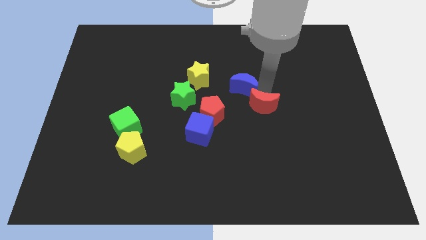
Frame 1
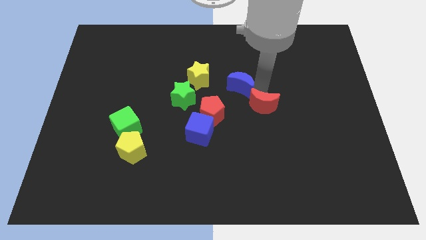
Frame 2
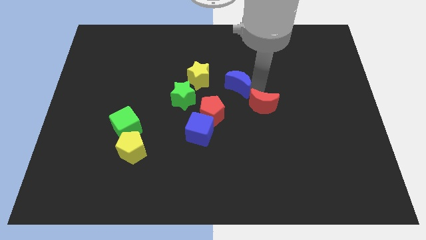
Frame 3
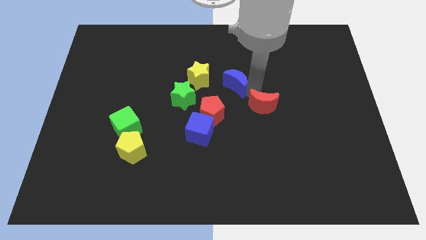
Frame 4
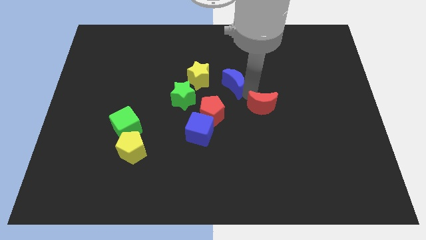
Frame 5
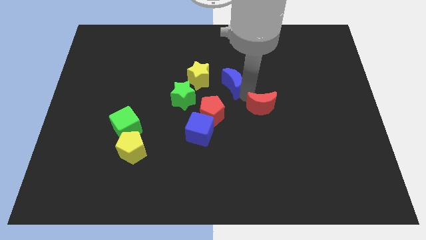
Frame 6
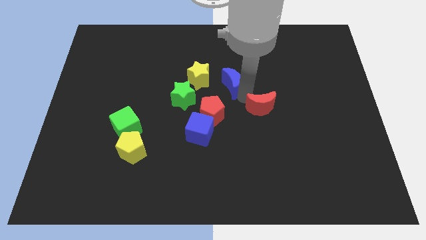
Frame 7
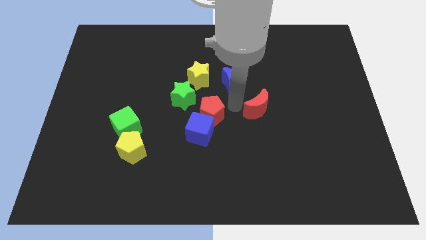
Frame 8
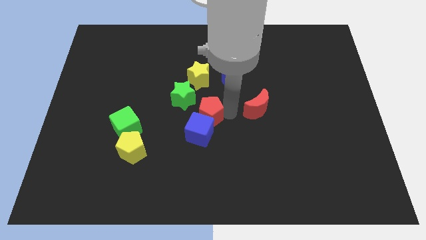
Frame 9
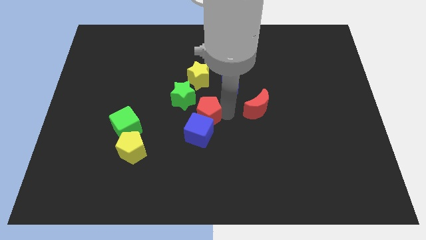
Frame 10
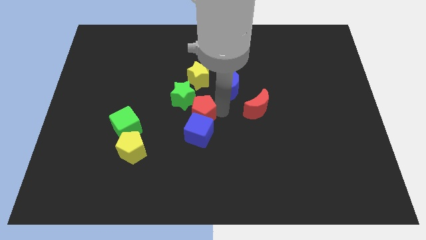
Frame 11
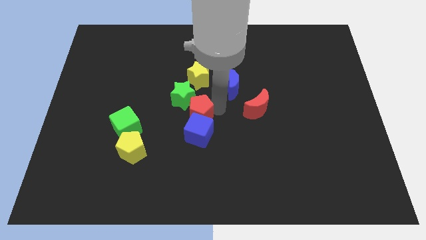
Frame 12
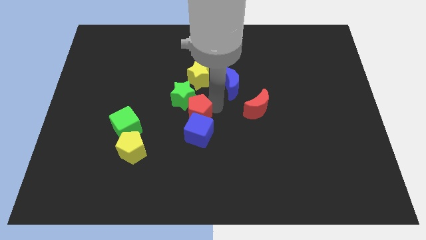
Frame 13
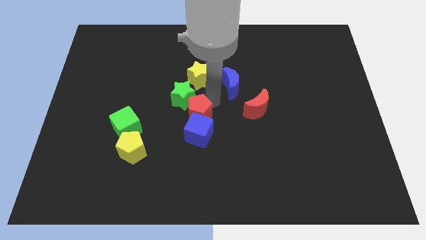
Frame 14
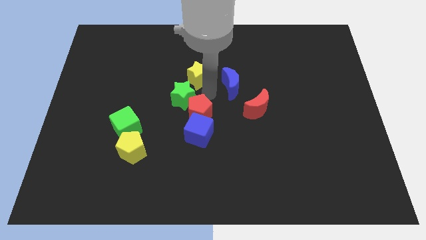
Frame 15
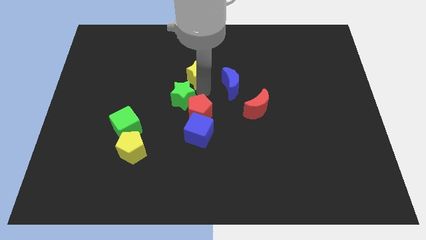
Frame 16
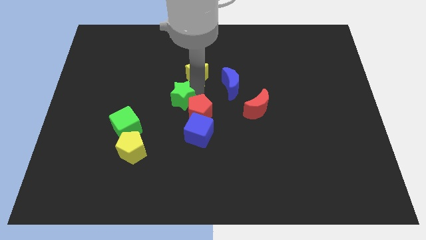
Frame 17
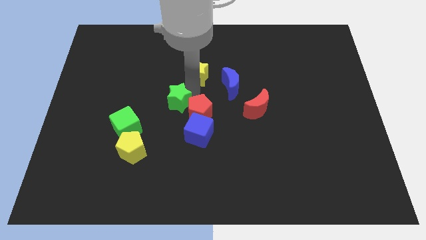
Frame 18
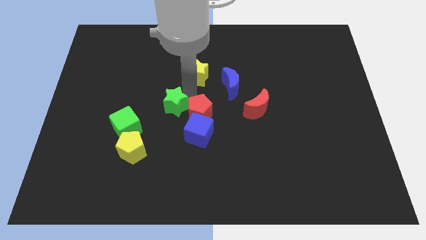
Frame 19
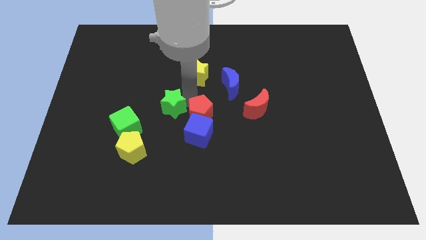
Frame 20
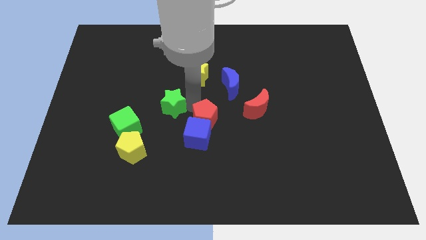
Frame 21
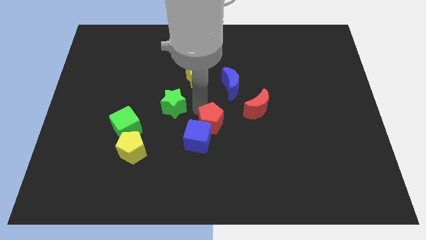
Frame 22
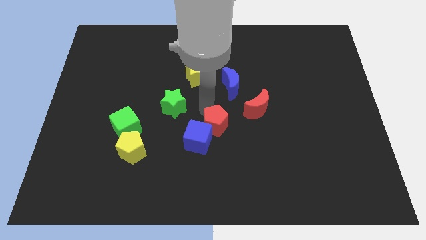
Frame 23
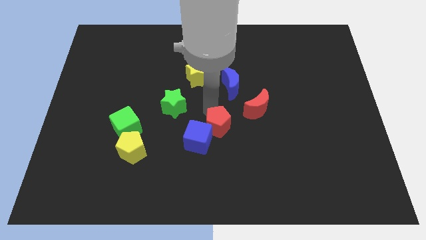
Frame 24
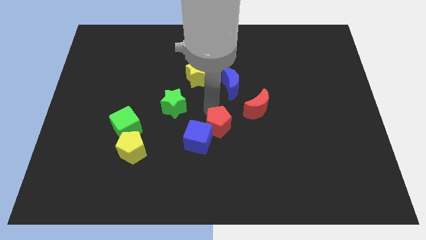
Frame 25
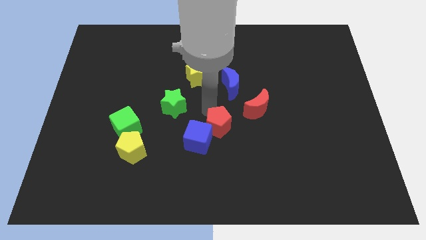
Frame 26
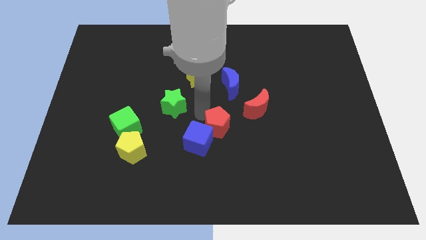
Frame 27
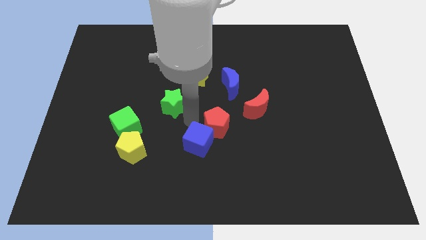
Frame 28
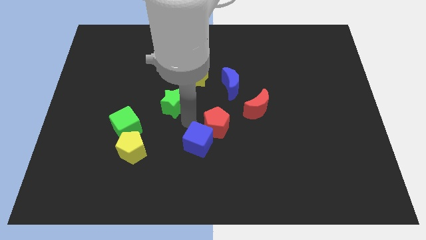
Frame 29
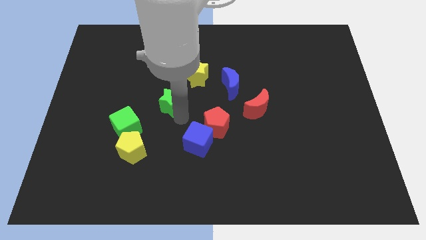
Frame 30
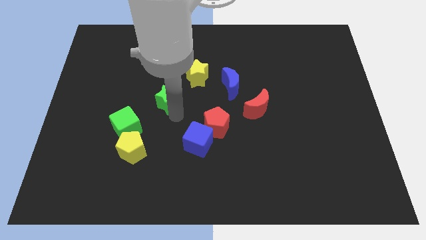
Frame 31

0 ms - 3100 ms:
move the red pentagon to the center of the board

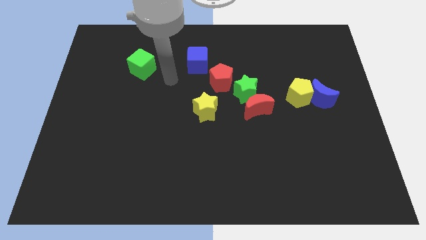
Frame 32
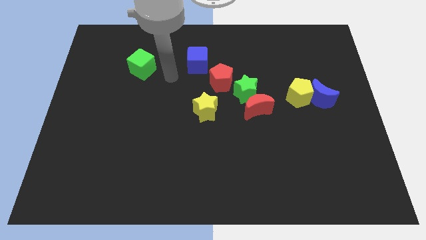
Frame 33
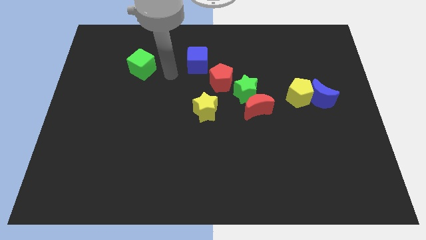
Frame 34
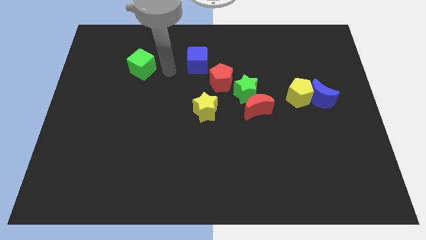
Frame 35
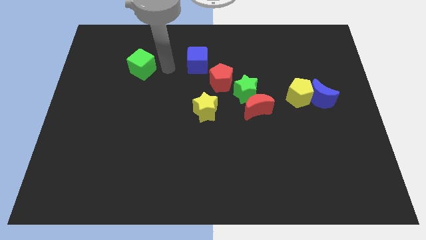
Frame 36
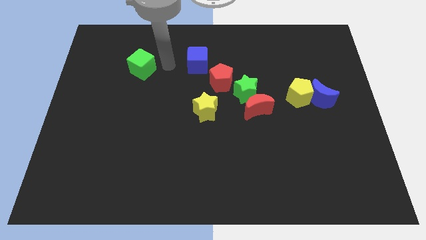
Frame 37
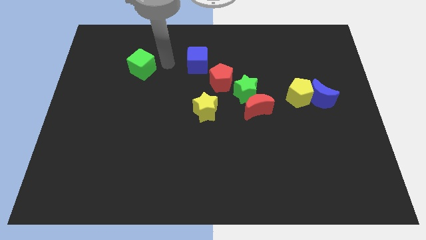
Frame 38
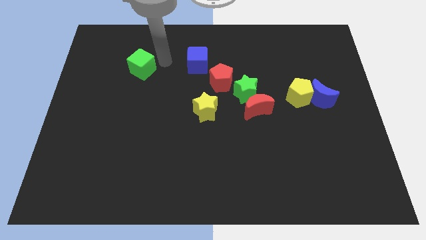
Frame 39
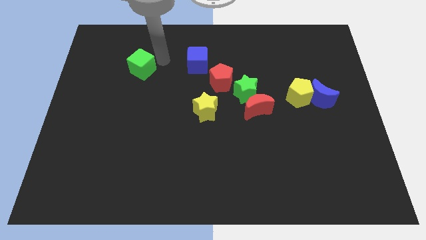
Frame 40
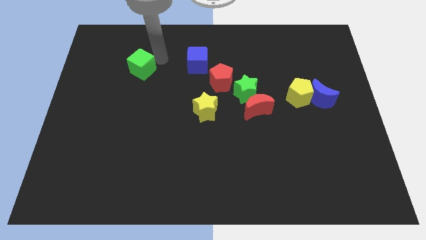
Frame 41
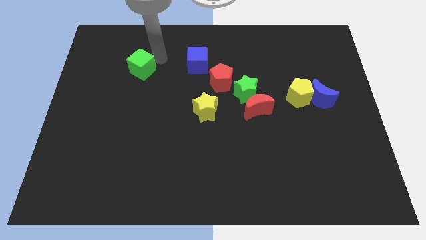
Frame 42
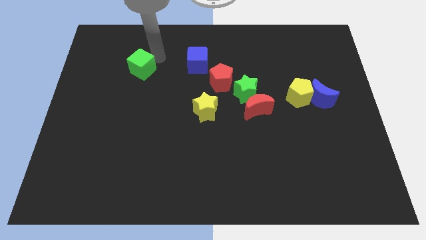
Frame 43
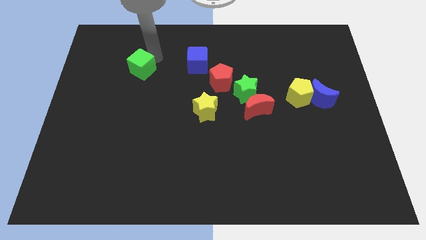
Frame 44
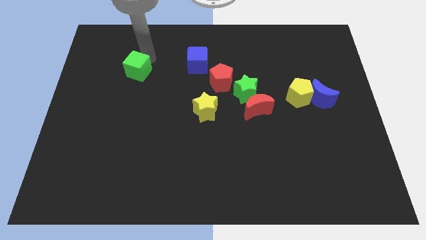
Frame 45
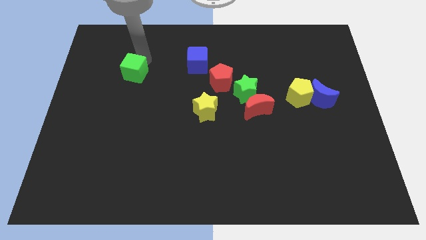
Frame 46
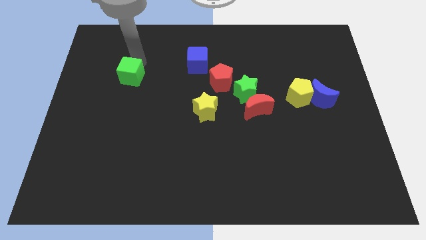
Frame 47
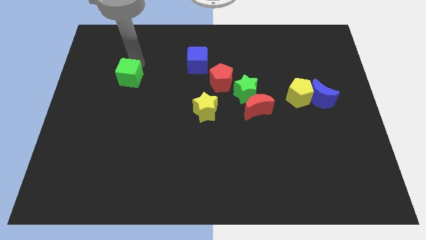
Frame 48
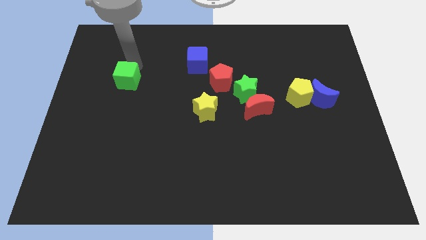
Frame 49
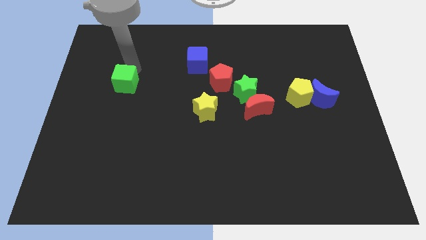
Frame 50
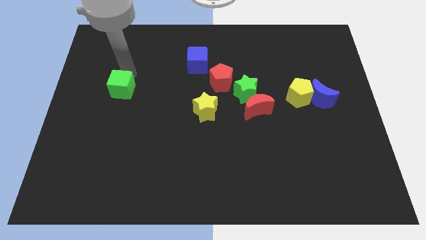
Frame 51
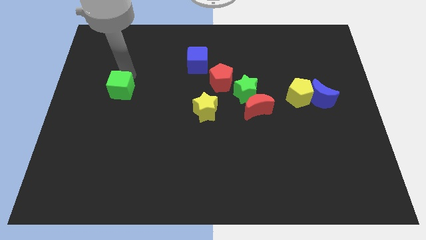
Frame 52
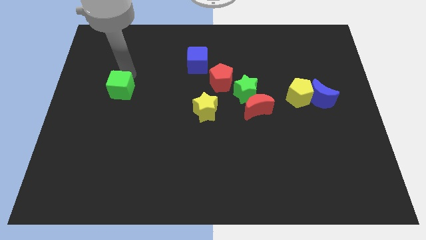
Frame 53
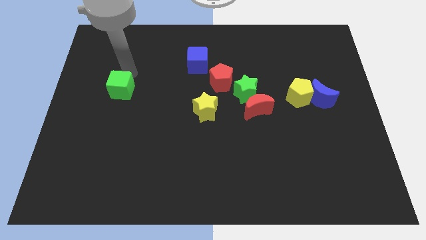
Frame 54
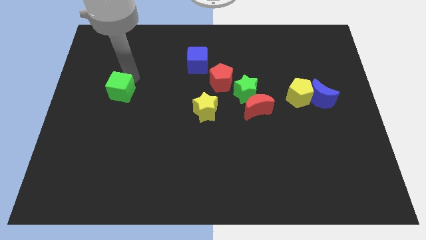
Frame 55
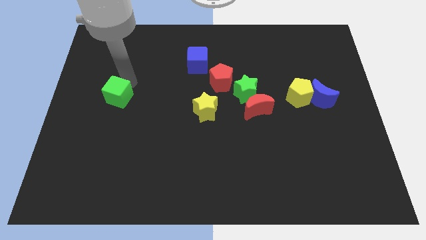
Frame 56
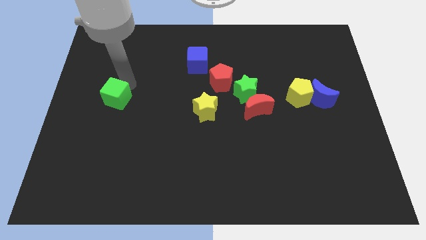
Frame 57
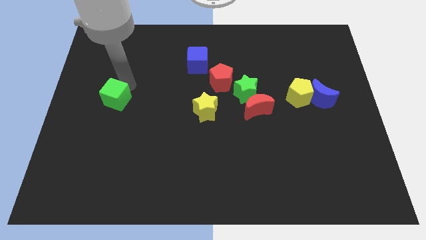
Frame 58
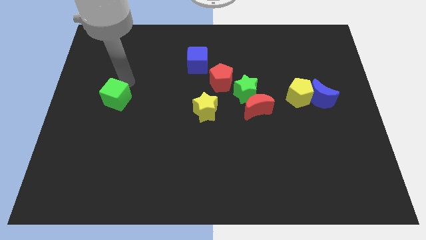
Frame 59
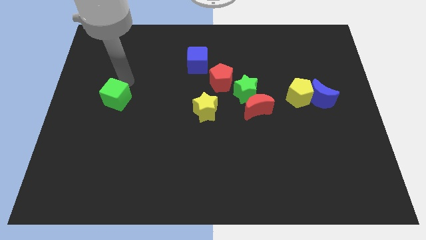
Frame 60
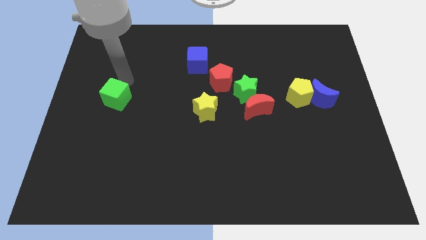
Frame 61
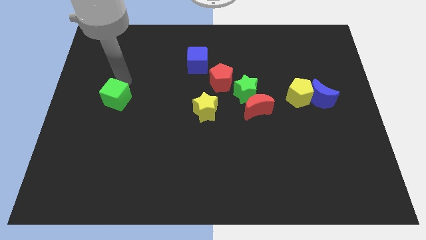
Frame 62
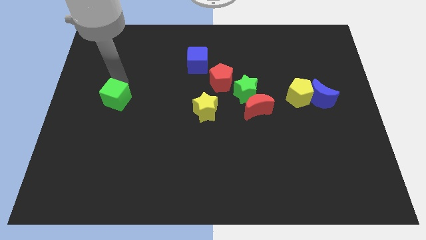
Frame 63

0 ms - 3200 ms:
move the green cube towards bottom

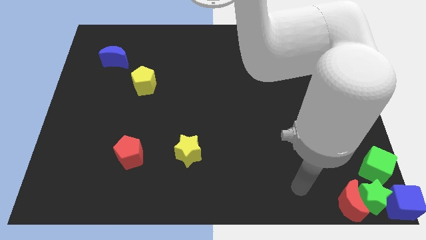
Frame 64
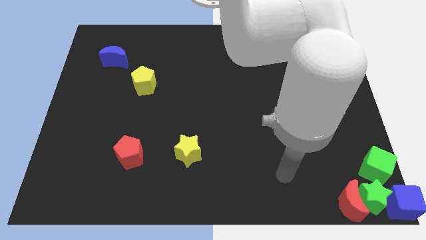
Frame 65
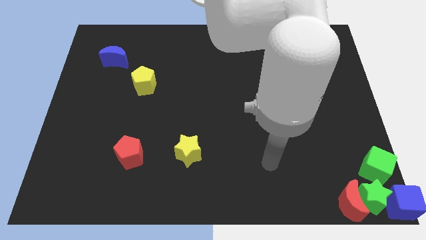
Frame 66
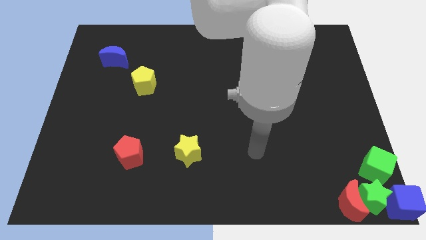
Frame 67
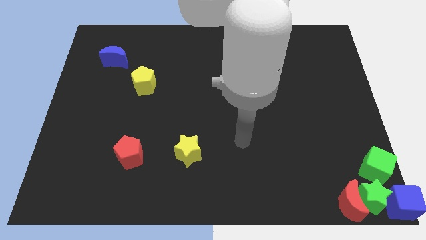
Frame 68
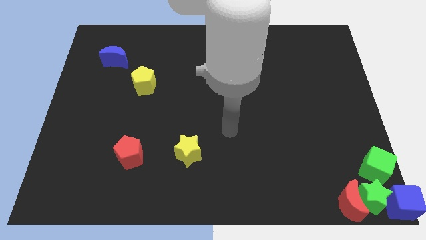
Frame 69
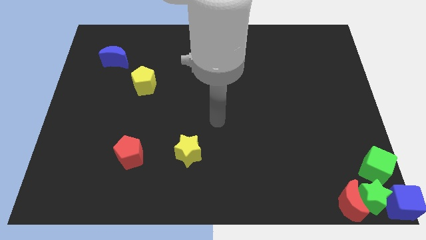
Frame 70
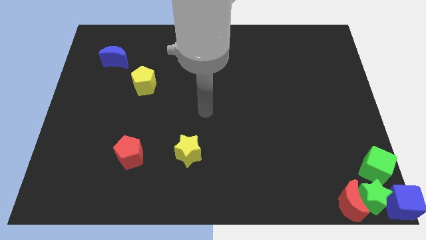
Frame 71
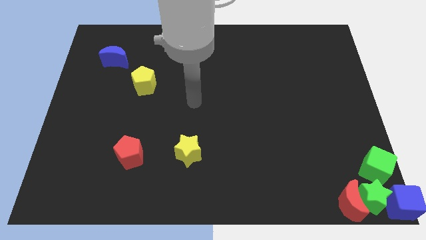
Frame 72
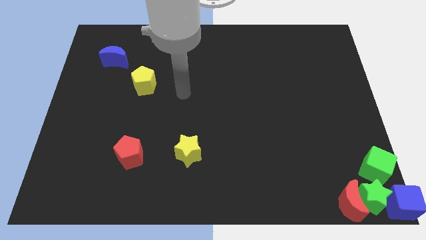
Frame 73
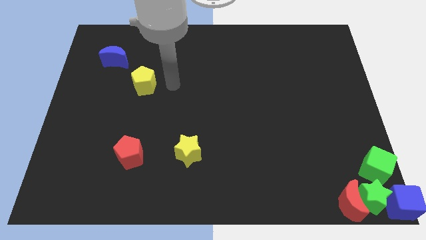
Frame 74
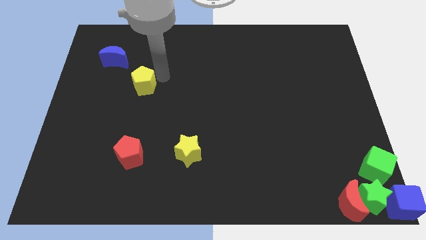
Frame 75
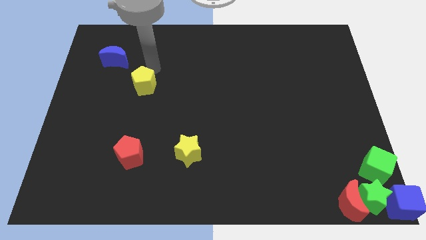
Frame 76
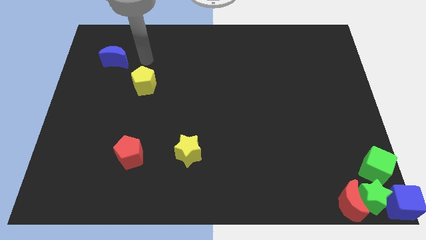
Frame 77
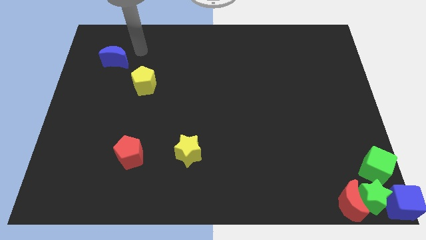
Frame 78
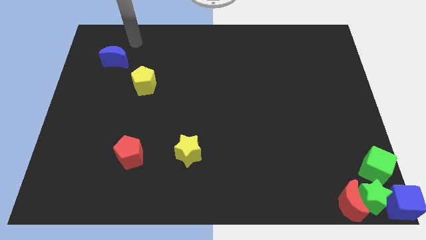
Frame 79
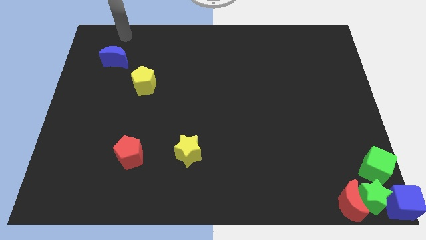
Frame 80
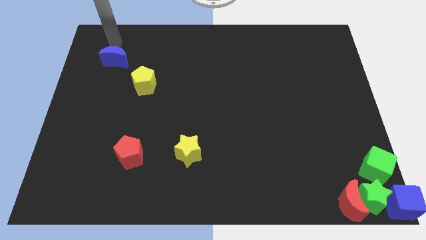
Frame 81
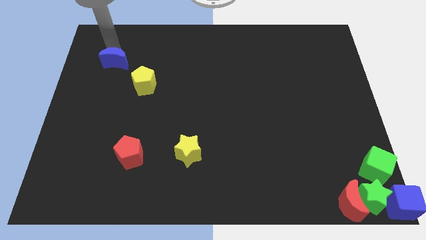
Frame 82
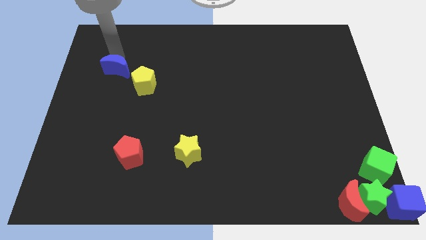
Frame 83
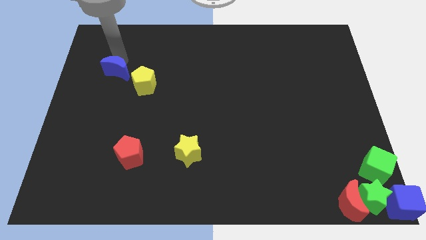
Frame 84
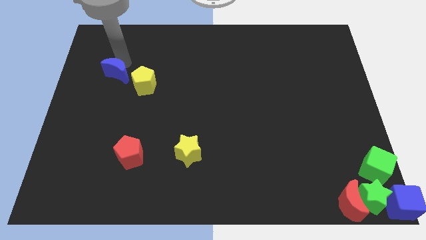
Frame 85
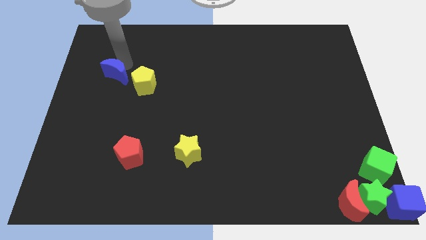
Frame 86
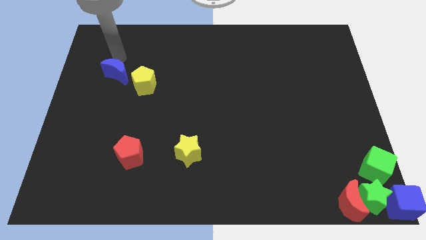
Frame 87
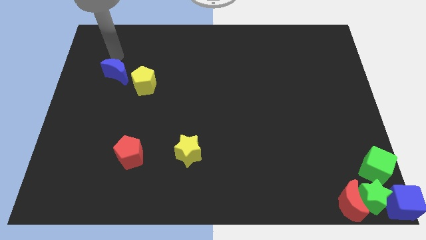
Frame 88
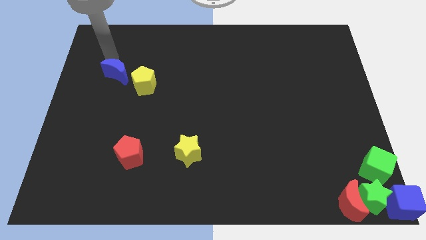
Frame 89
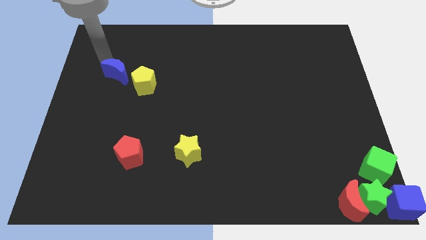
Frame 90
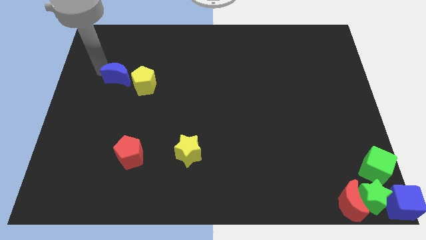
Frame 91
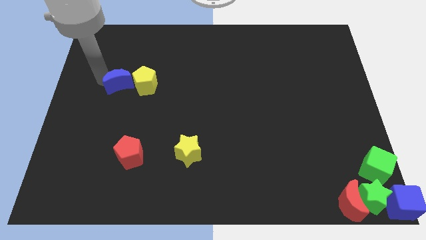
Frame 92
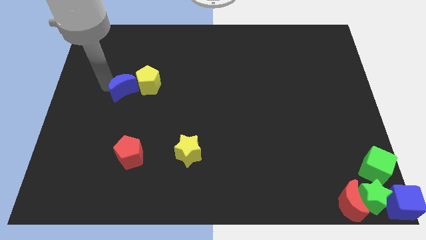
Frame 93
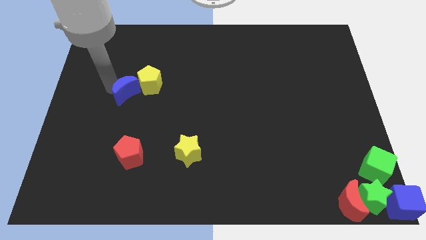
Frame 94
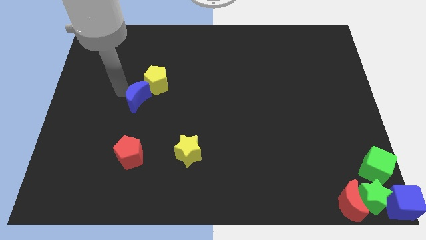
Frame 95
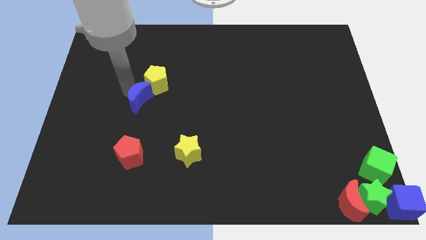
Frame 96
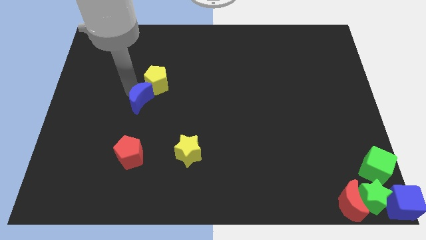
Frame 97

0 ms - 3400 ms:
drag the blue crescent into the yellow pentagon
